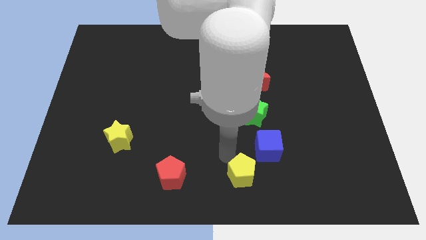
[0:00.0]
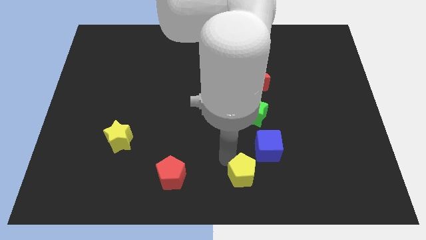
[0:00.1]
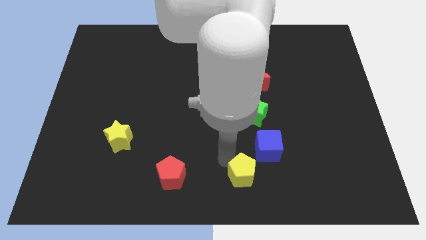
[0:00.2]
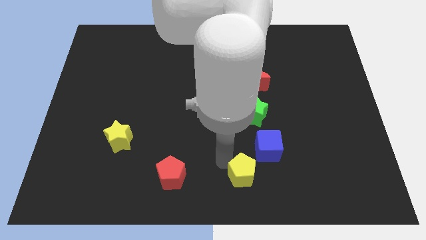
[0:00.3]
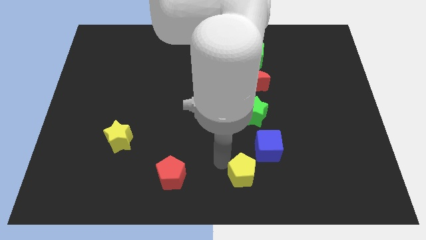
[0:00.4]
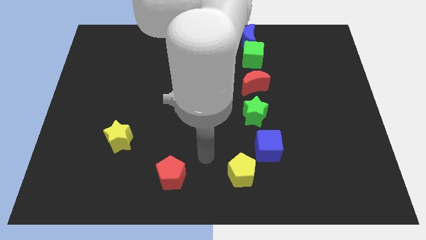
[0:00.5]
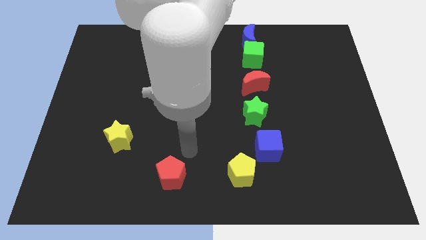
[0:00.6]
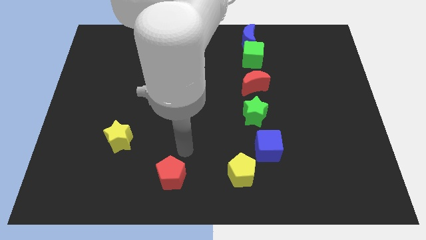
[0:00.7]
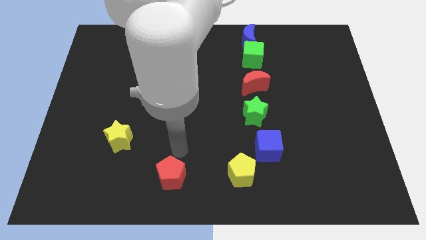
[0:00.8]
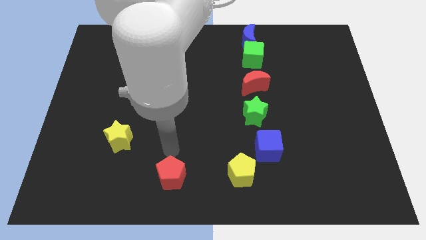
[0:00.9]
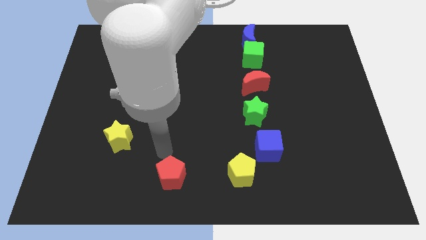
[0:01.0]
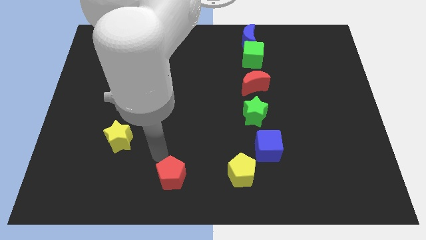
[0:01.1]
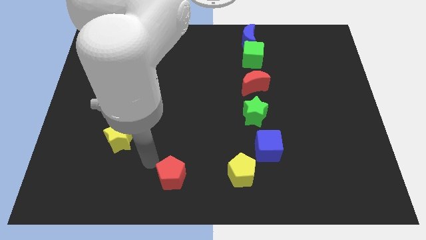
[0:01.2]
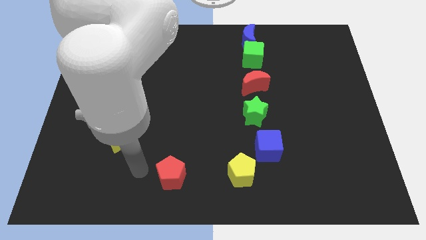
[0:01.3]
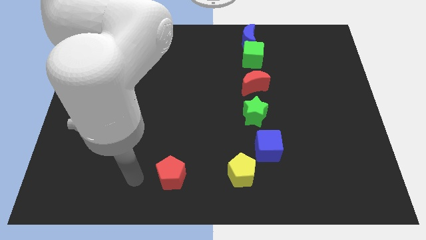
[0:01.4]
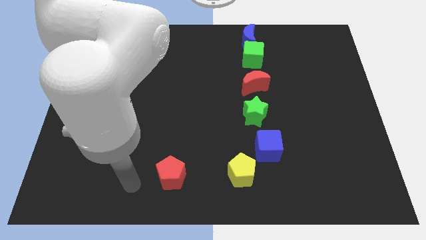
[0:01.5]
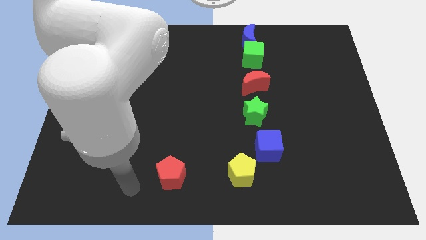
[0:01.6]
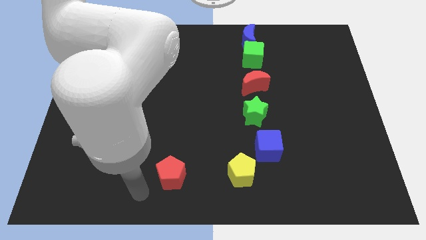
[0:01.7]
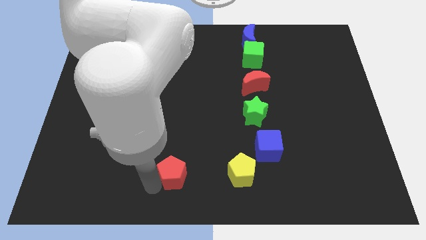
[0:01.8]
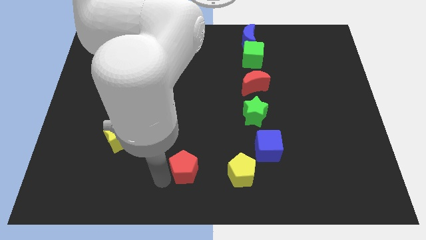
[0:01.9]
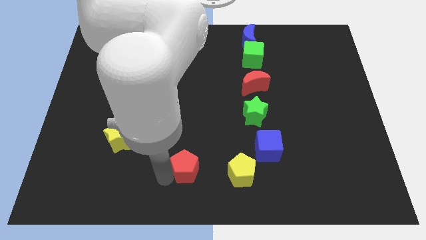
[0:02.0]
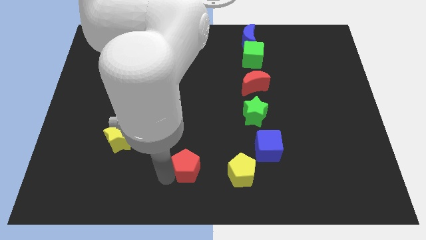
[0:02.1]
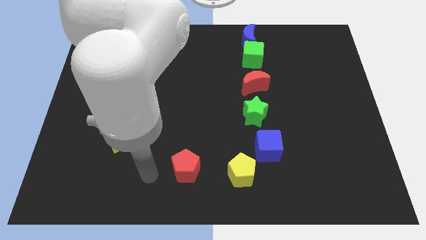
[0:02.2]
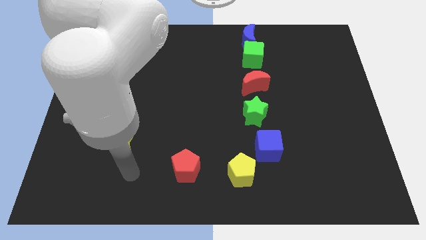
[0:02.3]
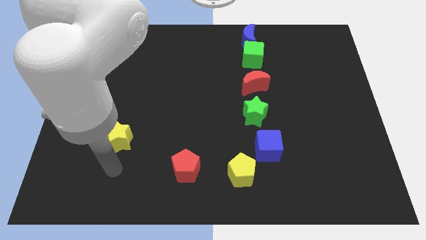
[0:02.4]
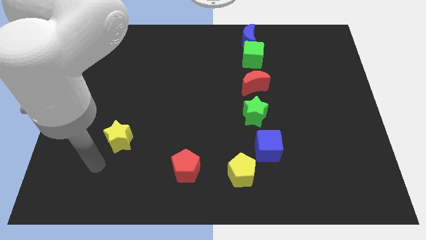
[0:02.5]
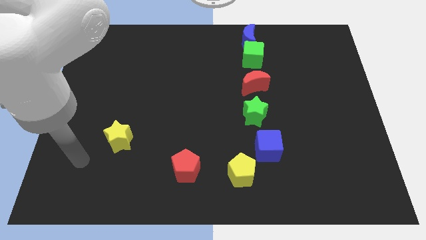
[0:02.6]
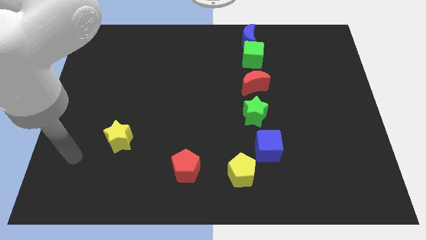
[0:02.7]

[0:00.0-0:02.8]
push the red pentagon slightly to the right

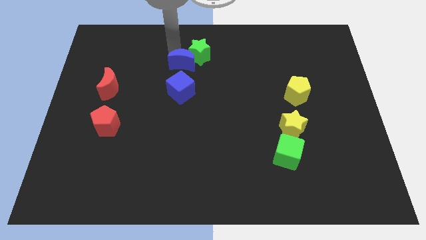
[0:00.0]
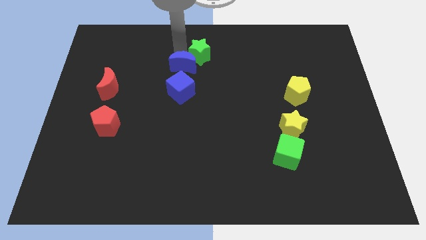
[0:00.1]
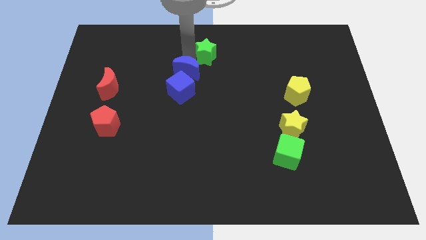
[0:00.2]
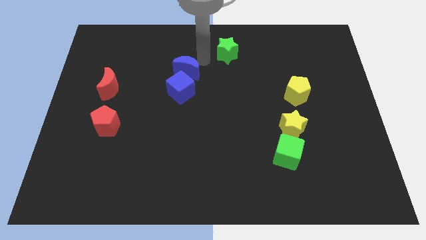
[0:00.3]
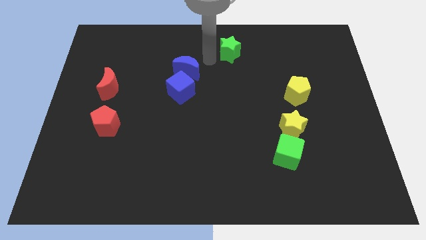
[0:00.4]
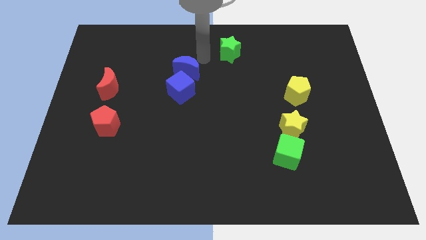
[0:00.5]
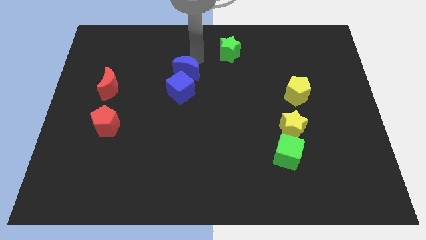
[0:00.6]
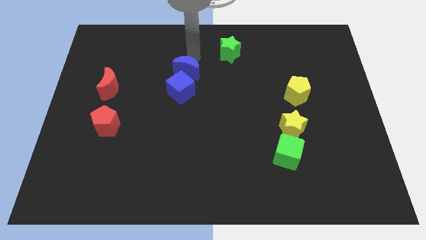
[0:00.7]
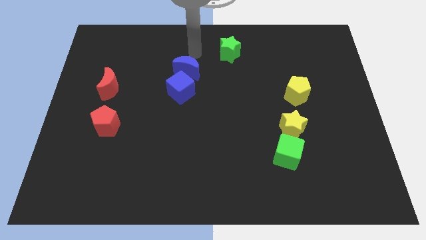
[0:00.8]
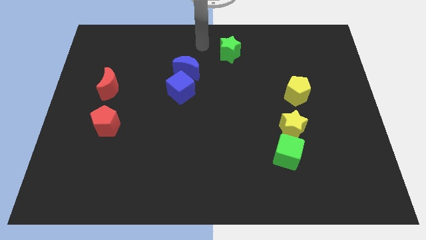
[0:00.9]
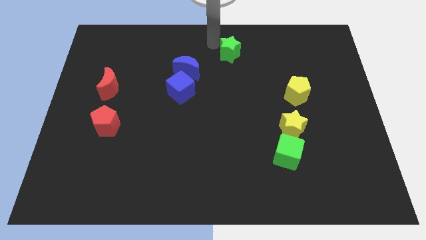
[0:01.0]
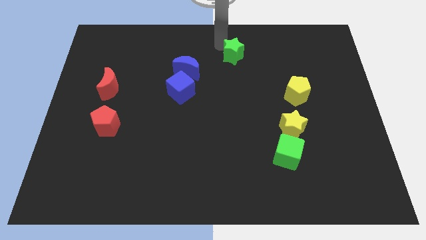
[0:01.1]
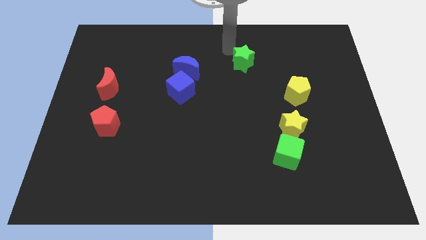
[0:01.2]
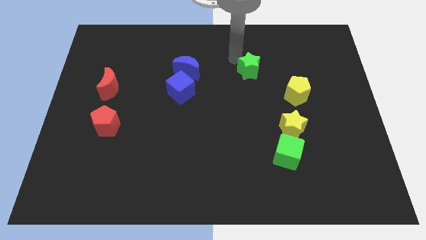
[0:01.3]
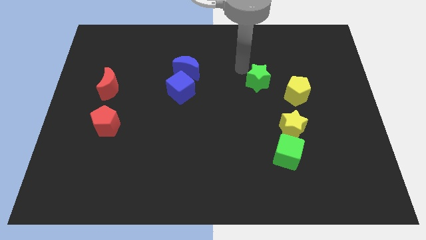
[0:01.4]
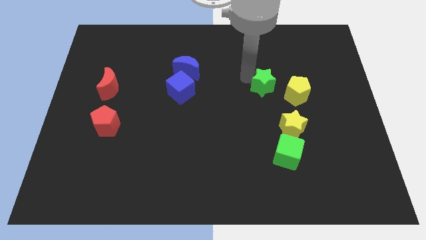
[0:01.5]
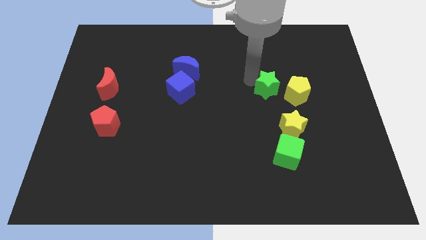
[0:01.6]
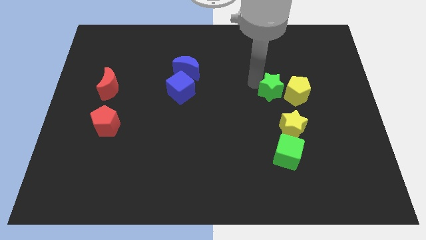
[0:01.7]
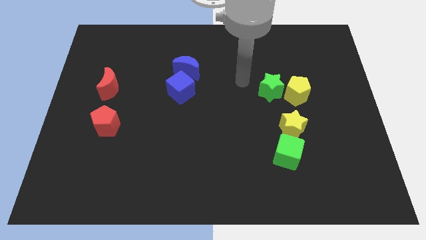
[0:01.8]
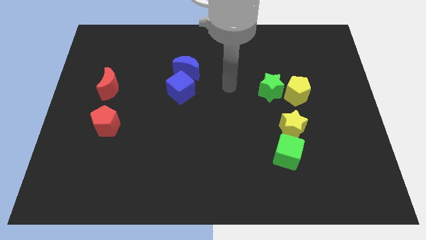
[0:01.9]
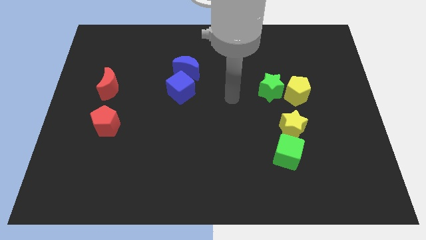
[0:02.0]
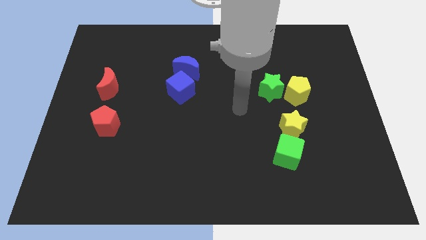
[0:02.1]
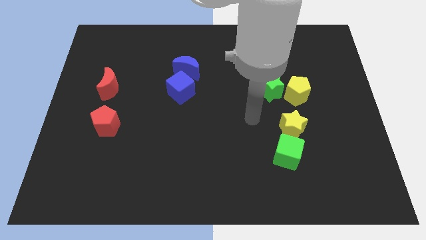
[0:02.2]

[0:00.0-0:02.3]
move the green star close to the yellow pentagon

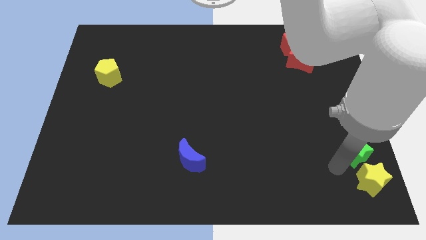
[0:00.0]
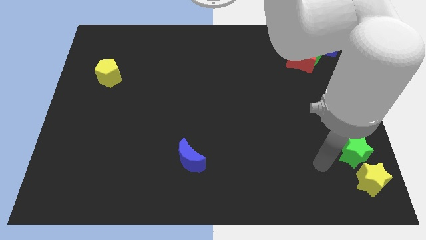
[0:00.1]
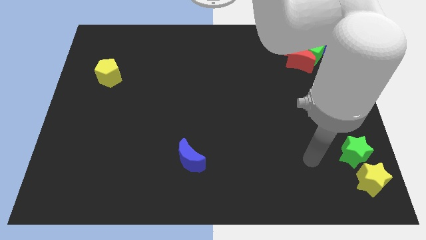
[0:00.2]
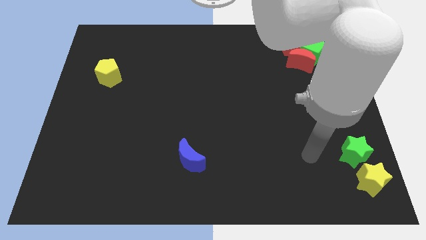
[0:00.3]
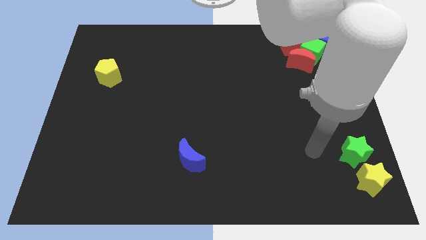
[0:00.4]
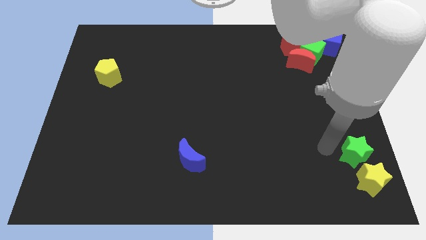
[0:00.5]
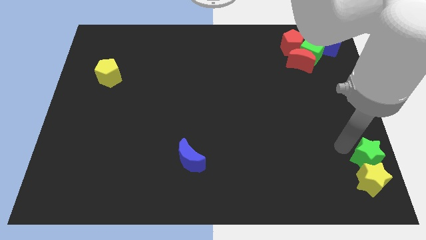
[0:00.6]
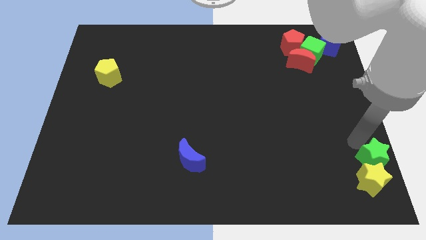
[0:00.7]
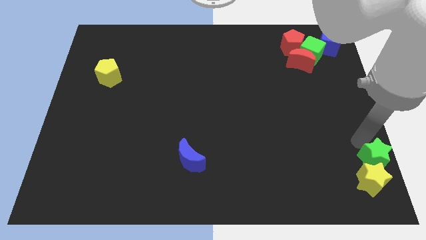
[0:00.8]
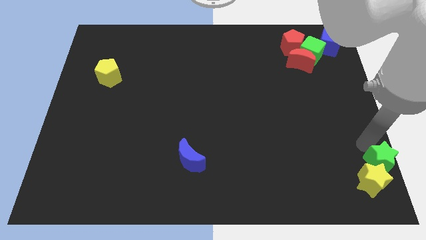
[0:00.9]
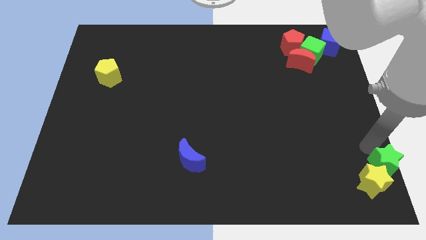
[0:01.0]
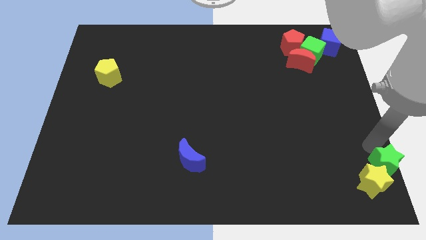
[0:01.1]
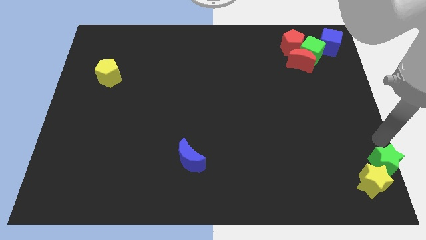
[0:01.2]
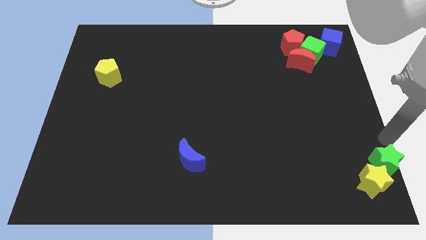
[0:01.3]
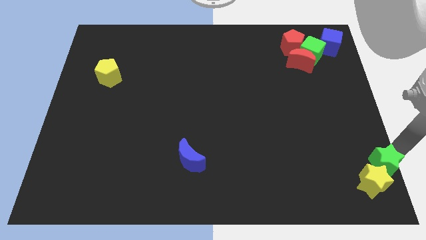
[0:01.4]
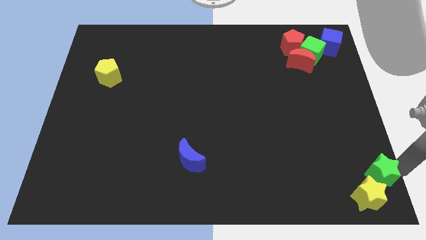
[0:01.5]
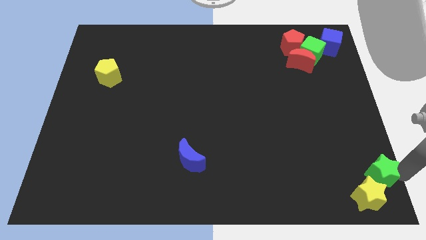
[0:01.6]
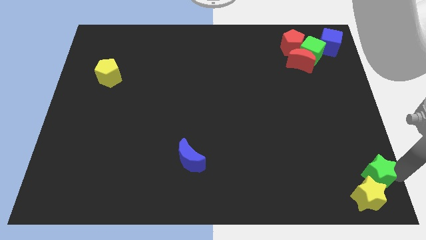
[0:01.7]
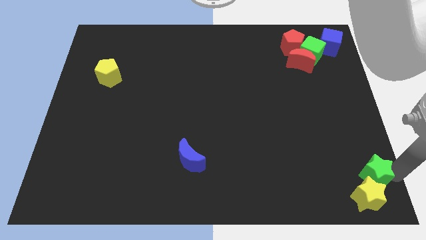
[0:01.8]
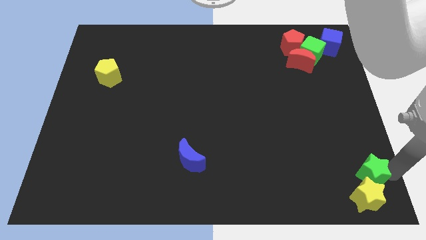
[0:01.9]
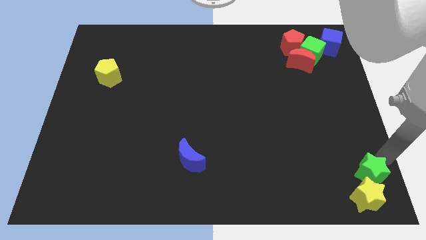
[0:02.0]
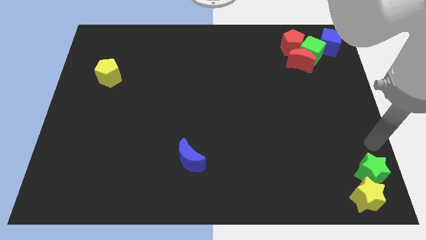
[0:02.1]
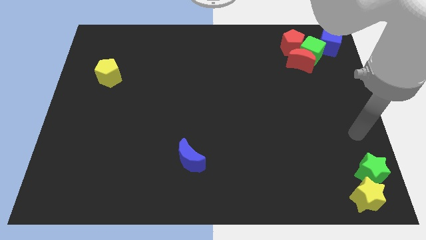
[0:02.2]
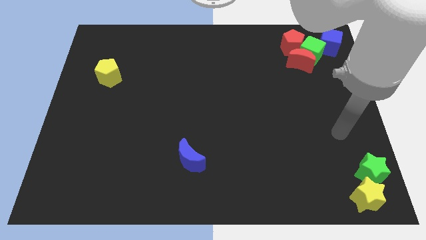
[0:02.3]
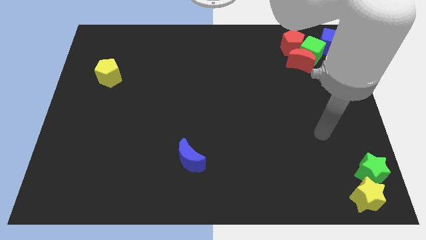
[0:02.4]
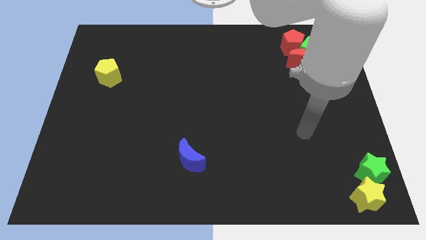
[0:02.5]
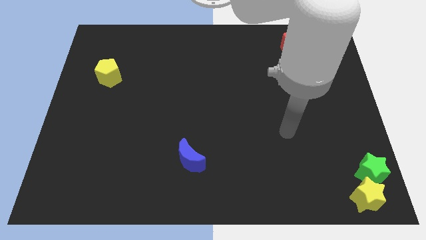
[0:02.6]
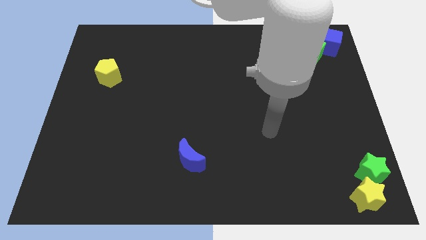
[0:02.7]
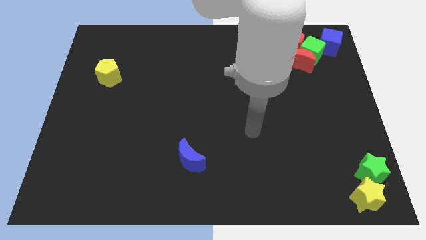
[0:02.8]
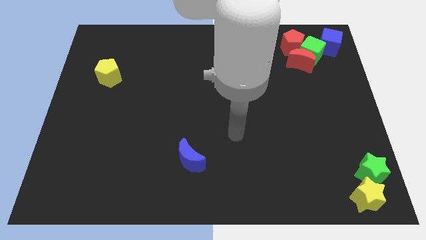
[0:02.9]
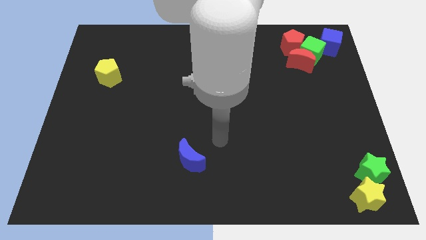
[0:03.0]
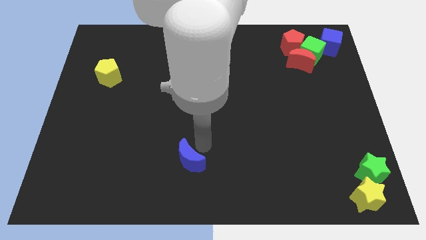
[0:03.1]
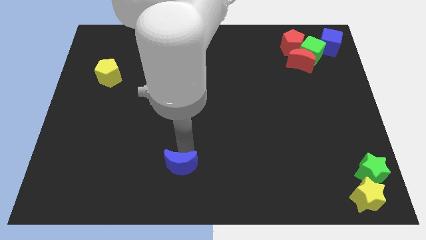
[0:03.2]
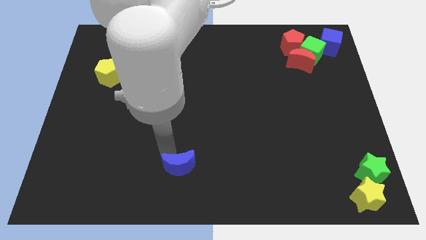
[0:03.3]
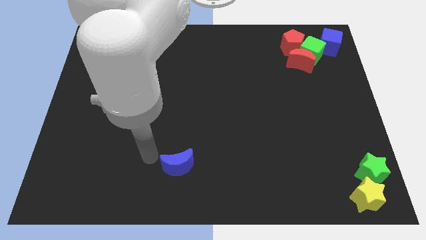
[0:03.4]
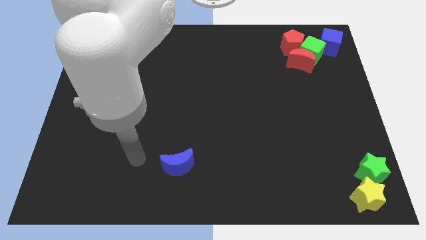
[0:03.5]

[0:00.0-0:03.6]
push the green star into yellow star

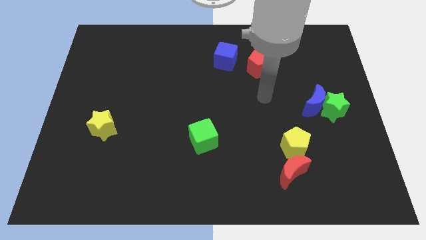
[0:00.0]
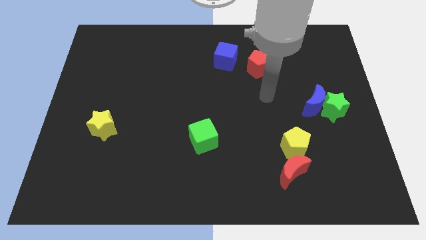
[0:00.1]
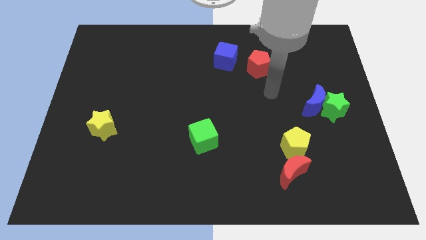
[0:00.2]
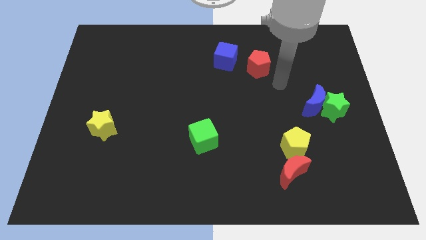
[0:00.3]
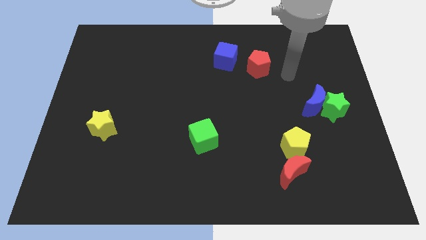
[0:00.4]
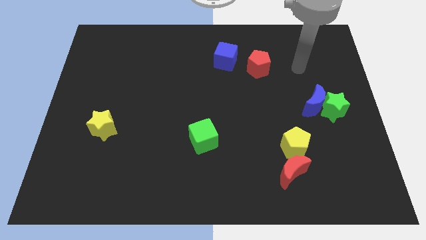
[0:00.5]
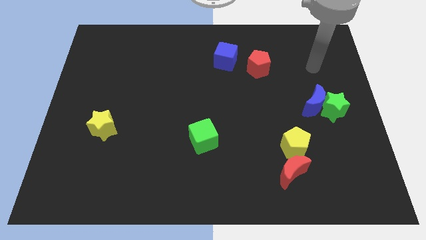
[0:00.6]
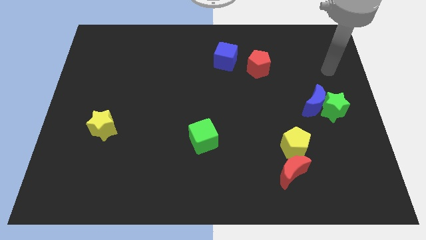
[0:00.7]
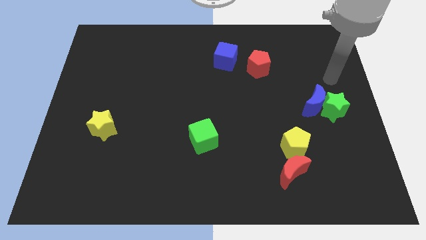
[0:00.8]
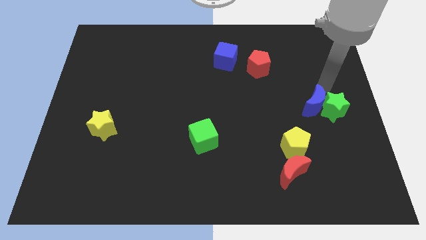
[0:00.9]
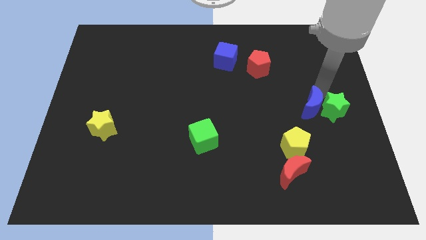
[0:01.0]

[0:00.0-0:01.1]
tap your arm on the top side of the blue moon
